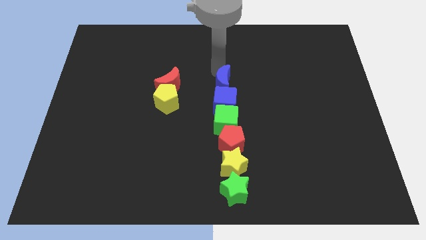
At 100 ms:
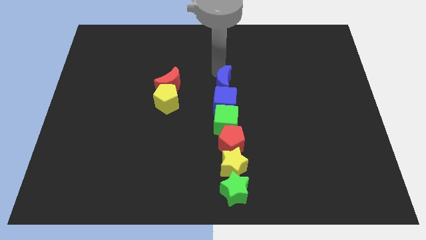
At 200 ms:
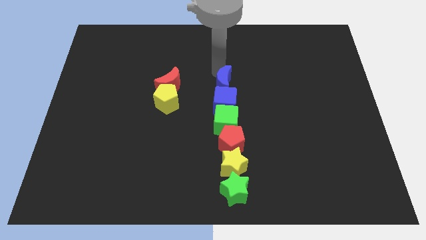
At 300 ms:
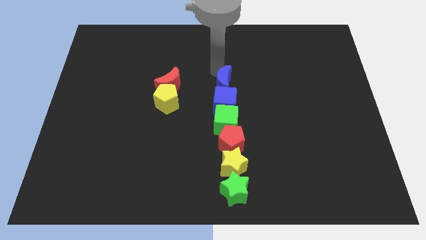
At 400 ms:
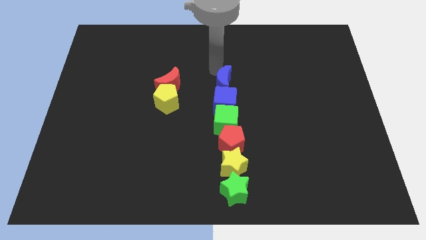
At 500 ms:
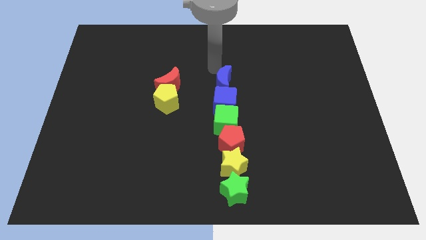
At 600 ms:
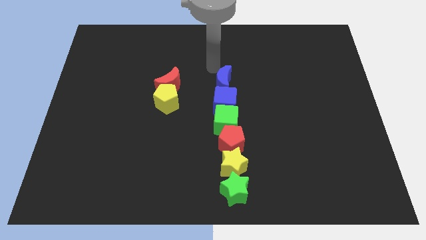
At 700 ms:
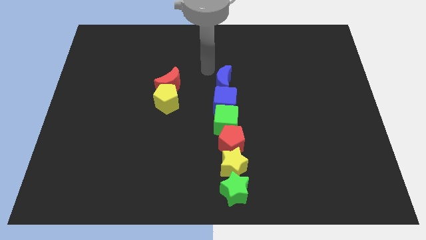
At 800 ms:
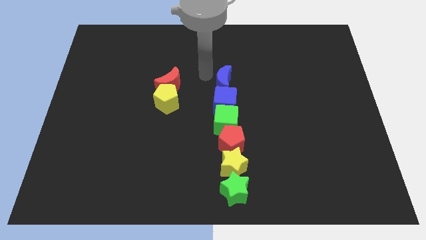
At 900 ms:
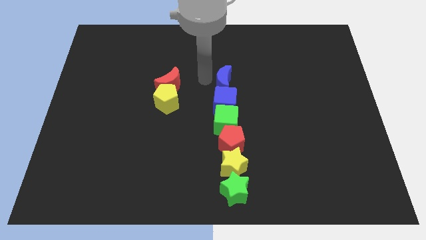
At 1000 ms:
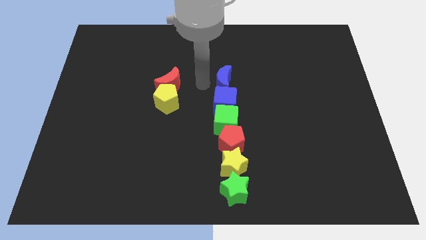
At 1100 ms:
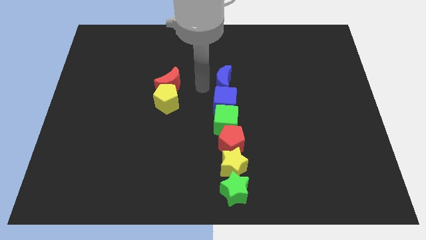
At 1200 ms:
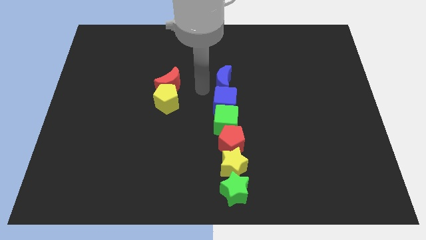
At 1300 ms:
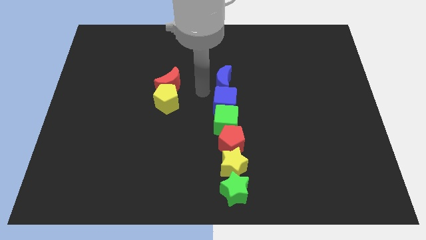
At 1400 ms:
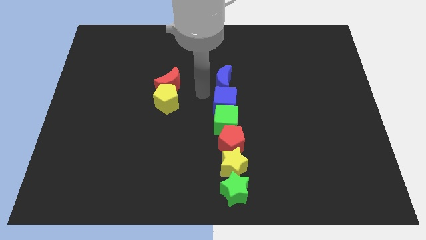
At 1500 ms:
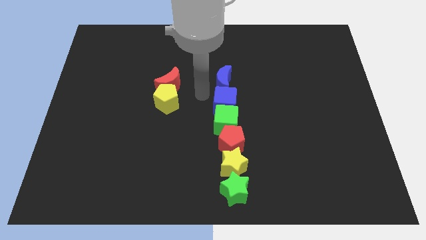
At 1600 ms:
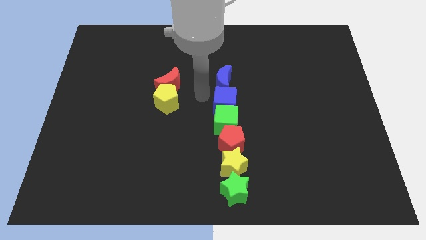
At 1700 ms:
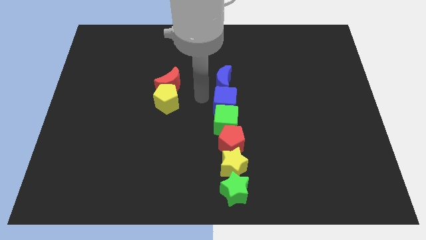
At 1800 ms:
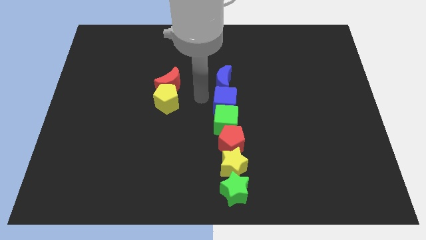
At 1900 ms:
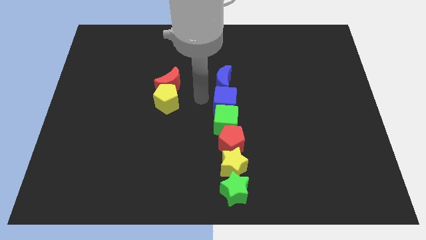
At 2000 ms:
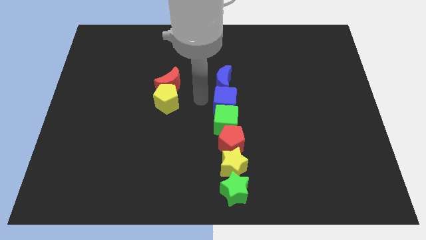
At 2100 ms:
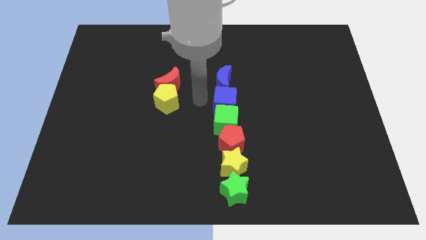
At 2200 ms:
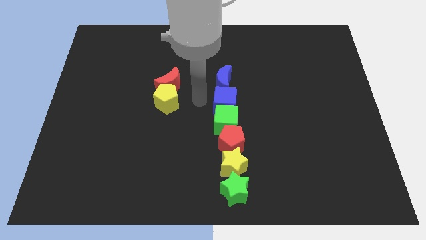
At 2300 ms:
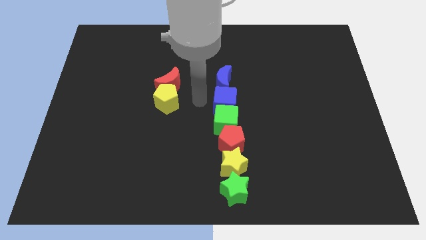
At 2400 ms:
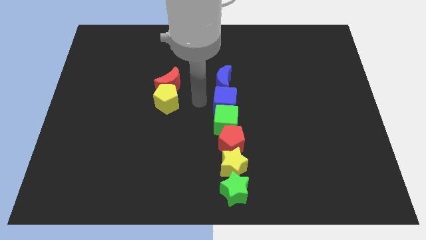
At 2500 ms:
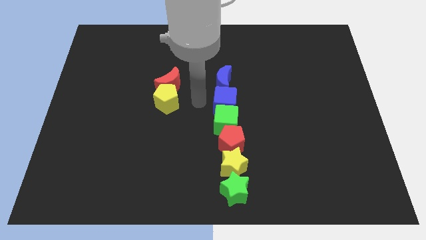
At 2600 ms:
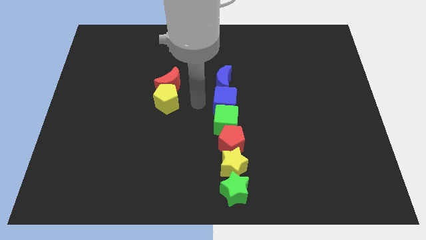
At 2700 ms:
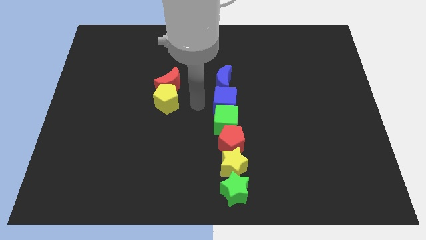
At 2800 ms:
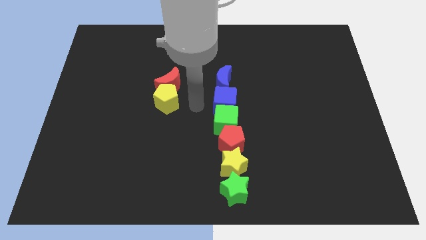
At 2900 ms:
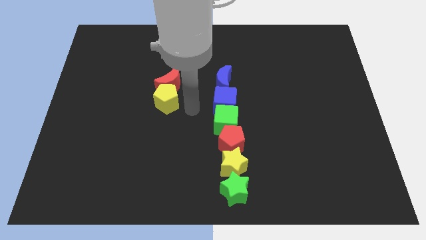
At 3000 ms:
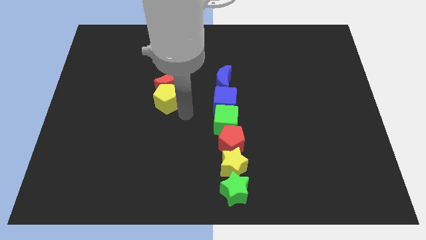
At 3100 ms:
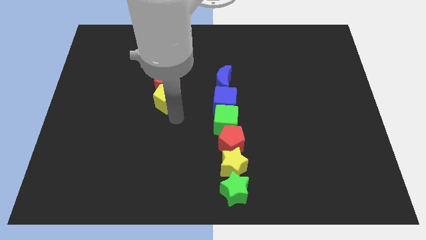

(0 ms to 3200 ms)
move the arm to the bottom of the yellow pentagon

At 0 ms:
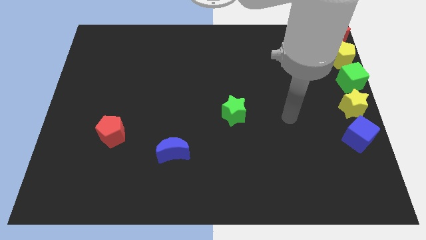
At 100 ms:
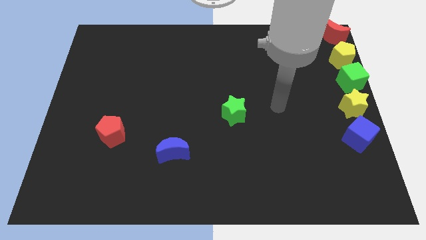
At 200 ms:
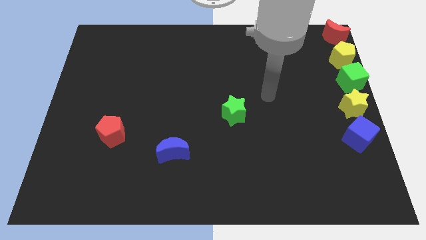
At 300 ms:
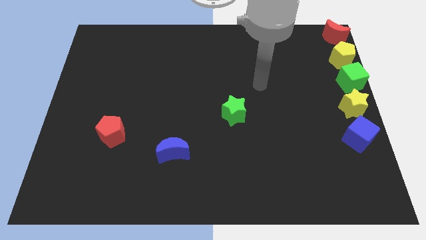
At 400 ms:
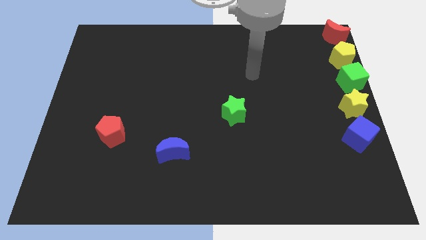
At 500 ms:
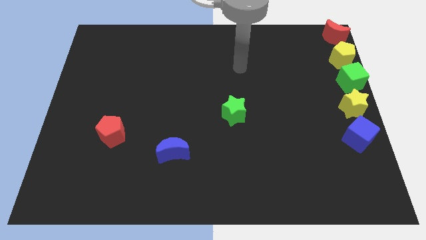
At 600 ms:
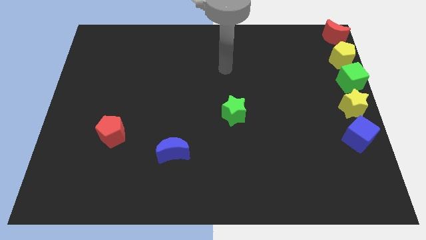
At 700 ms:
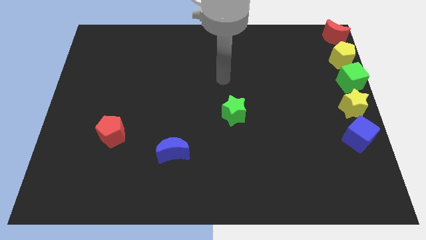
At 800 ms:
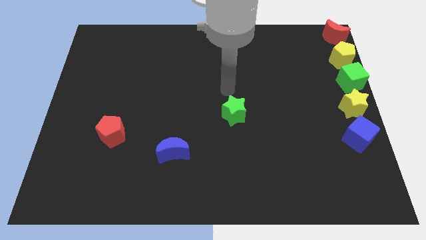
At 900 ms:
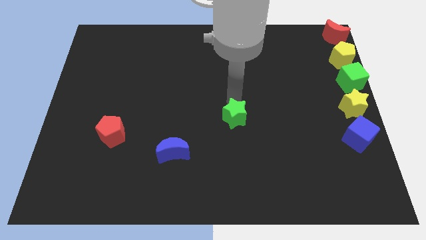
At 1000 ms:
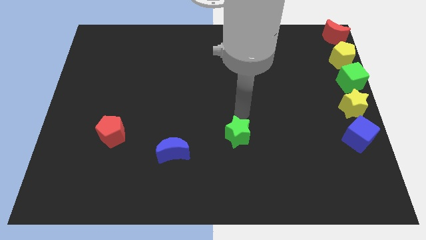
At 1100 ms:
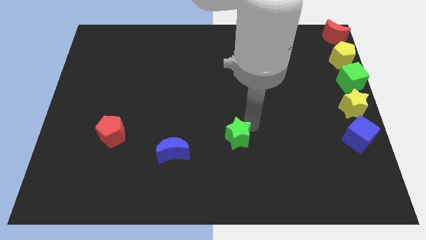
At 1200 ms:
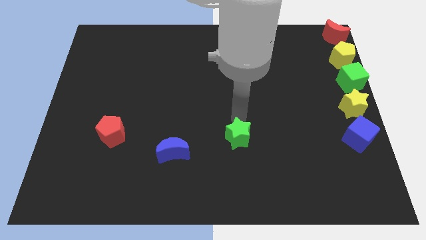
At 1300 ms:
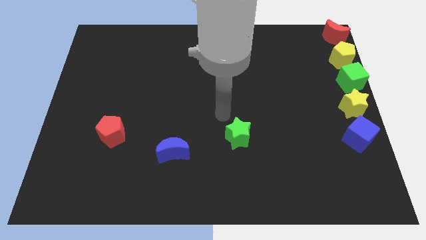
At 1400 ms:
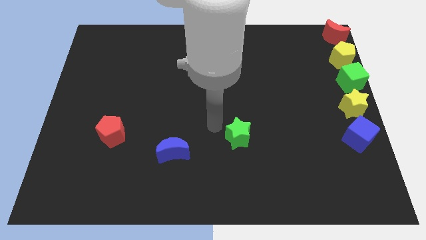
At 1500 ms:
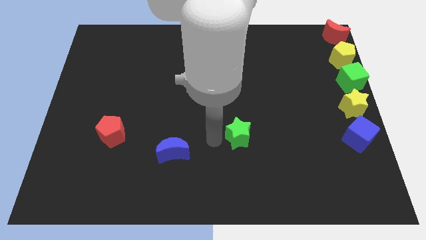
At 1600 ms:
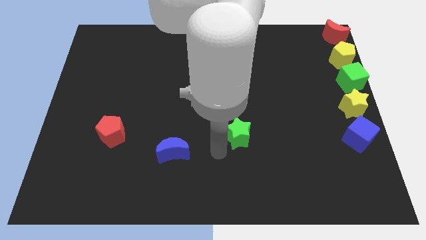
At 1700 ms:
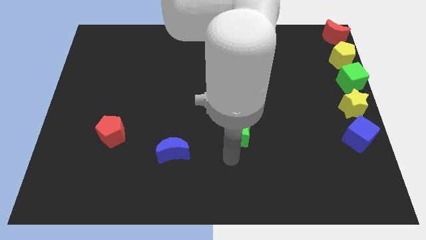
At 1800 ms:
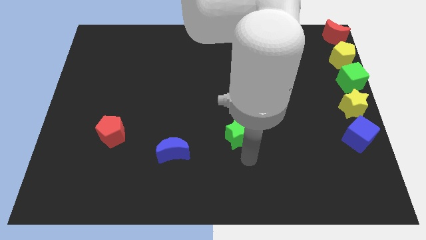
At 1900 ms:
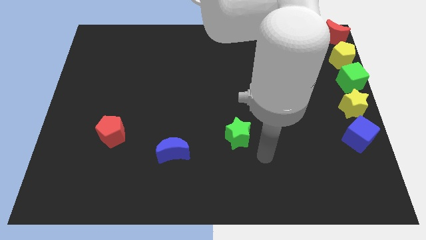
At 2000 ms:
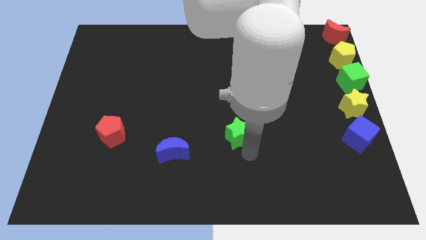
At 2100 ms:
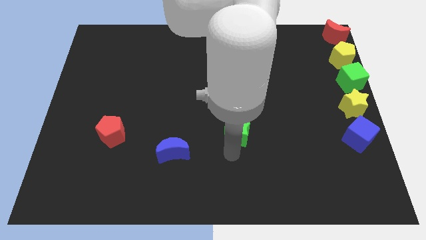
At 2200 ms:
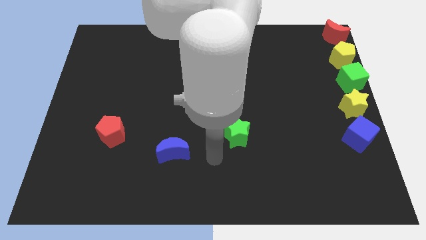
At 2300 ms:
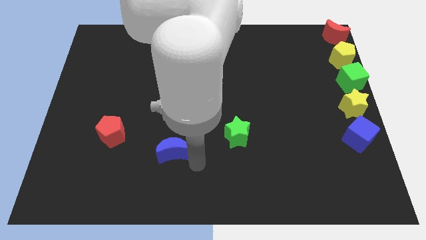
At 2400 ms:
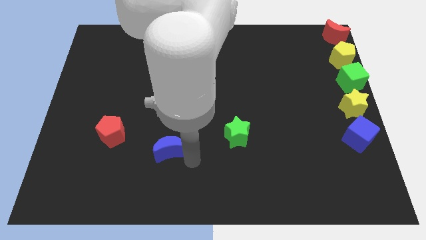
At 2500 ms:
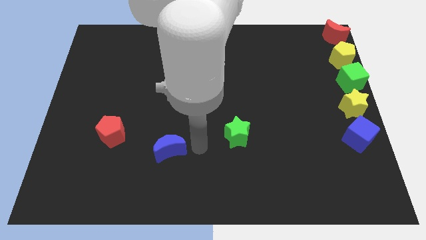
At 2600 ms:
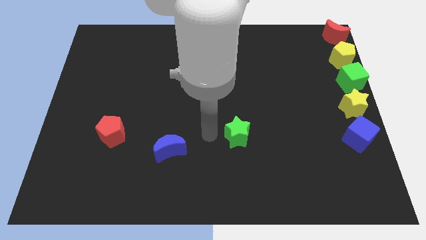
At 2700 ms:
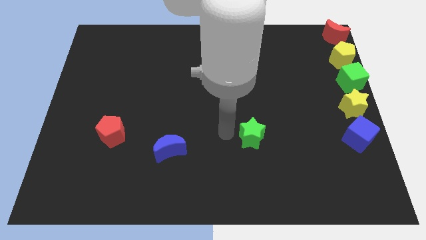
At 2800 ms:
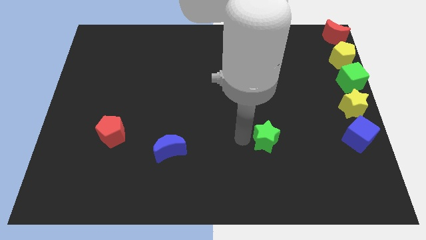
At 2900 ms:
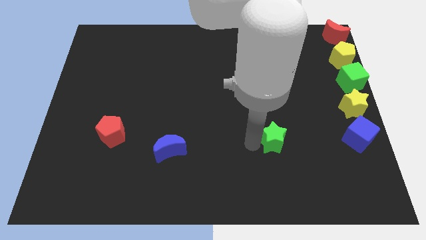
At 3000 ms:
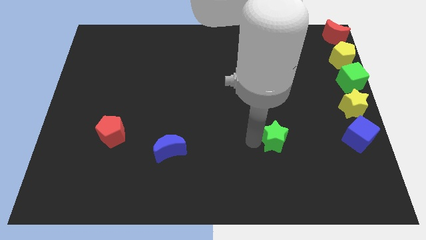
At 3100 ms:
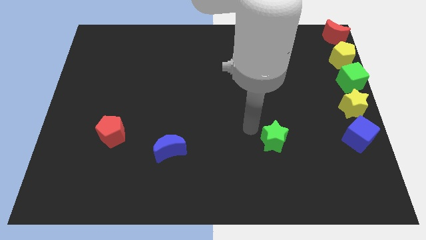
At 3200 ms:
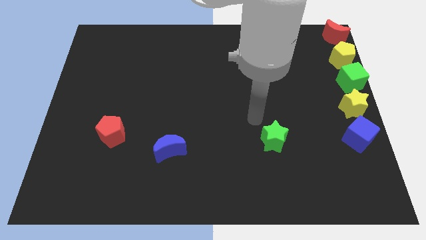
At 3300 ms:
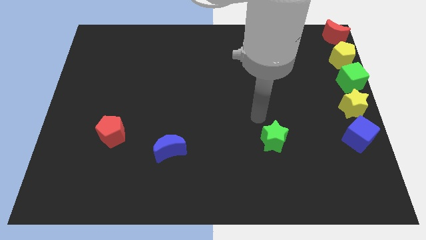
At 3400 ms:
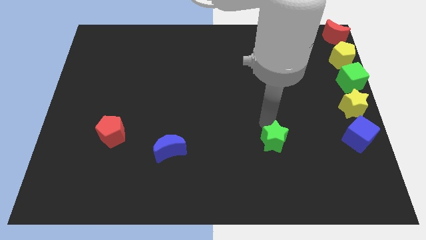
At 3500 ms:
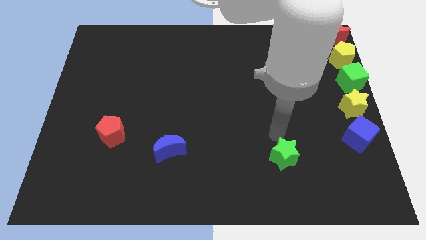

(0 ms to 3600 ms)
put the green star in between the blue cube and blue crescent

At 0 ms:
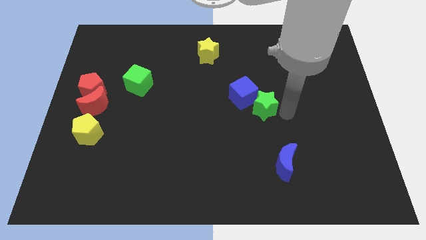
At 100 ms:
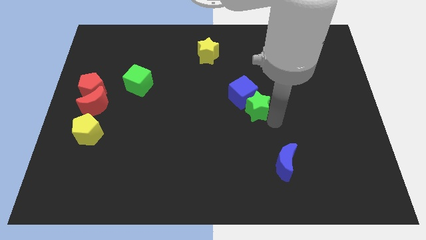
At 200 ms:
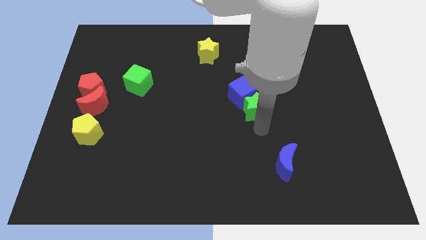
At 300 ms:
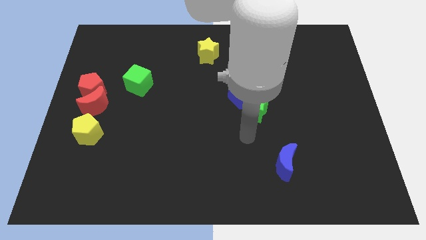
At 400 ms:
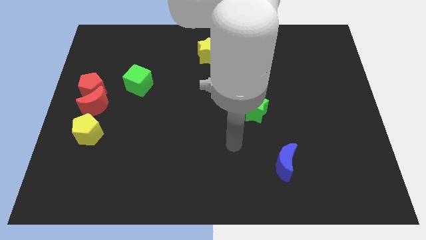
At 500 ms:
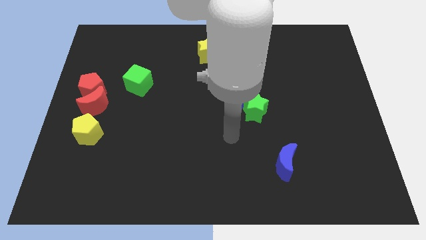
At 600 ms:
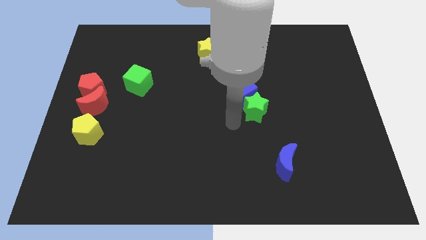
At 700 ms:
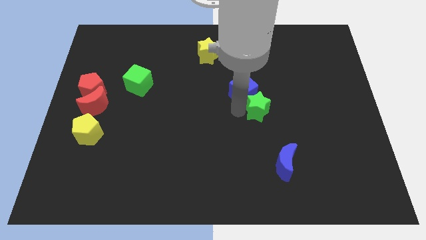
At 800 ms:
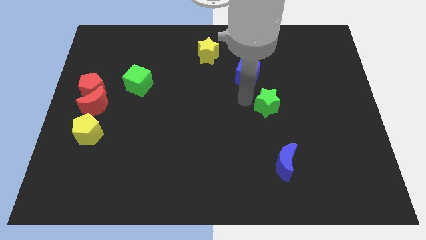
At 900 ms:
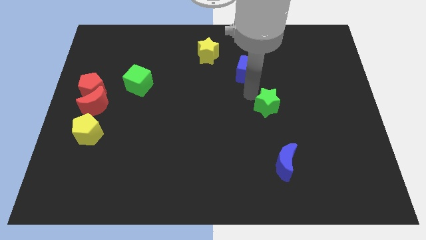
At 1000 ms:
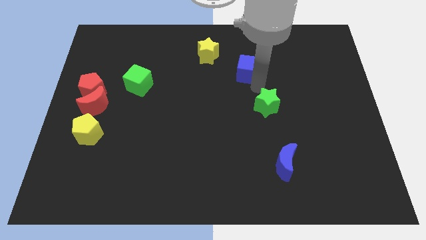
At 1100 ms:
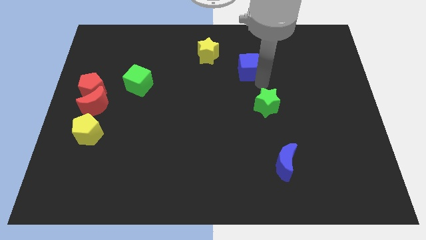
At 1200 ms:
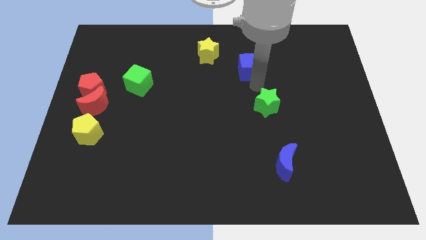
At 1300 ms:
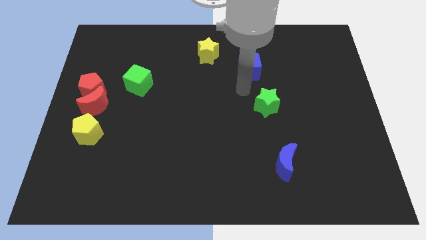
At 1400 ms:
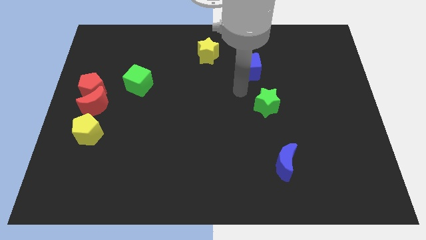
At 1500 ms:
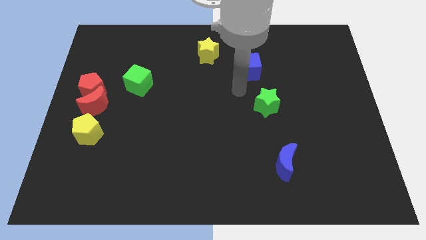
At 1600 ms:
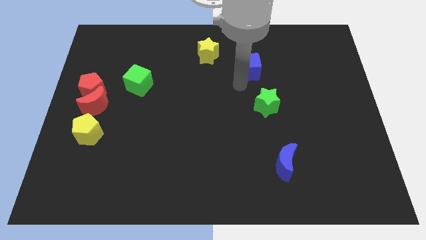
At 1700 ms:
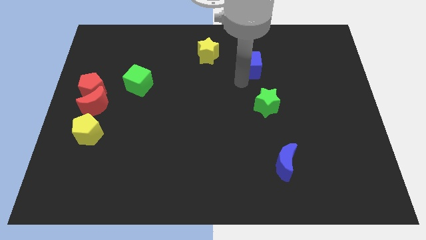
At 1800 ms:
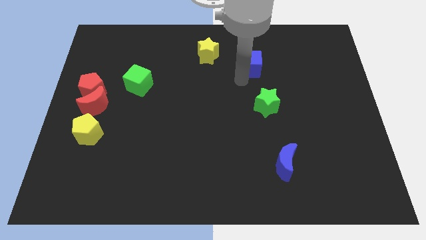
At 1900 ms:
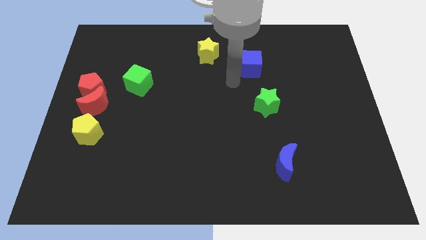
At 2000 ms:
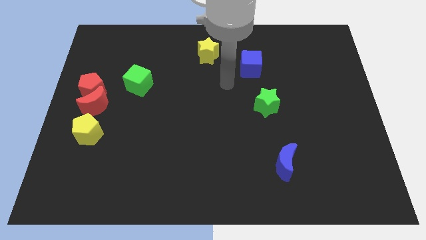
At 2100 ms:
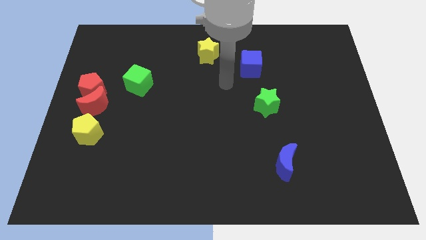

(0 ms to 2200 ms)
separate the blue cube from the green star

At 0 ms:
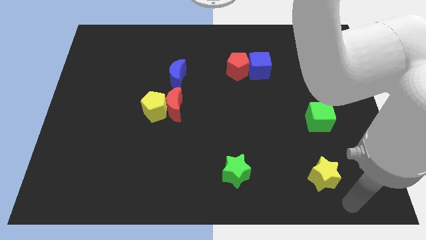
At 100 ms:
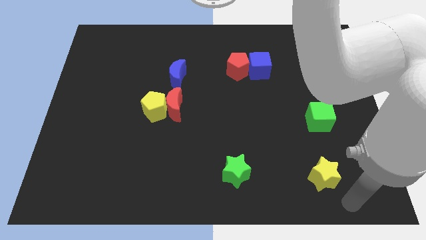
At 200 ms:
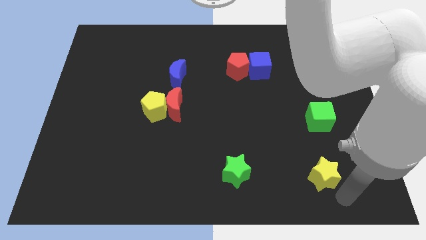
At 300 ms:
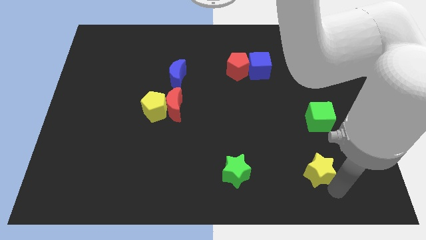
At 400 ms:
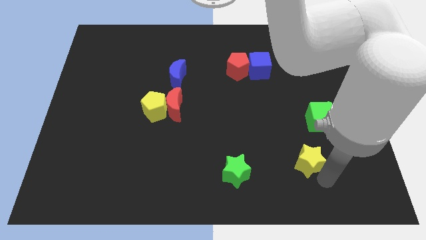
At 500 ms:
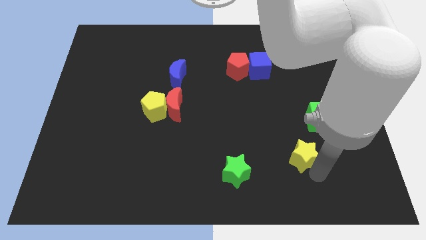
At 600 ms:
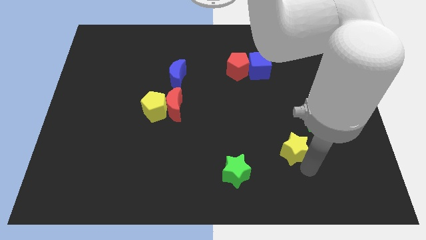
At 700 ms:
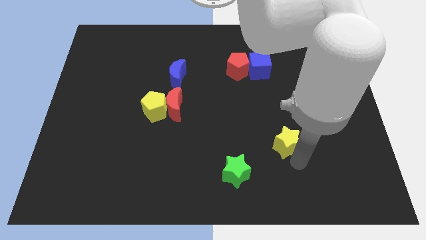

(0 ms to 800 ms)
place yellow star in between green blocks
